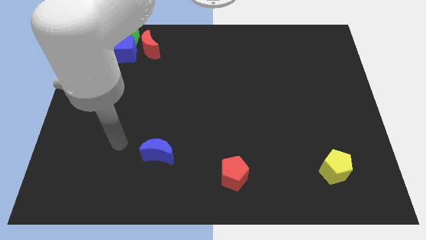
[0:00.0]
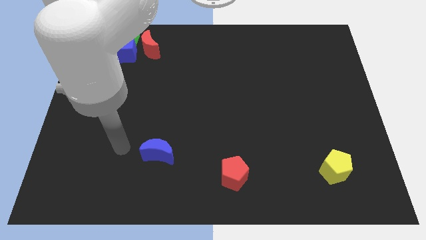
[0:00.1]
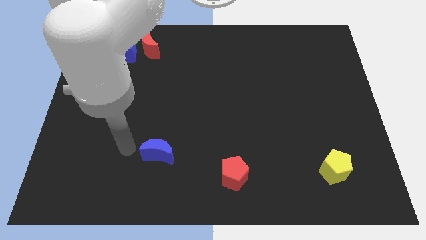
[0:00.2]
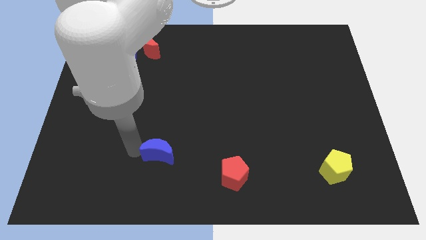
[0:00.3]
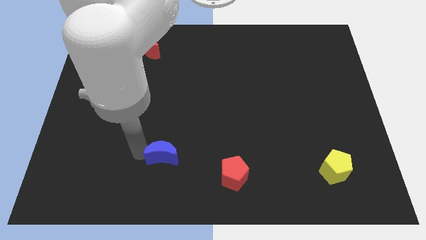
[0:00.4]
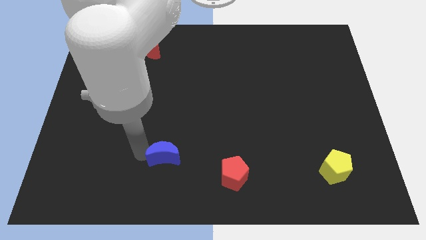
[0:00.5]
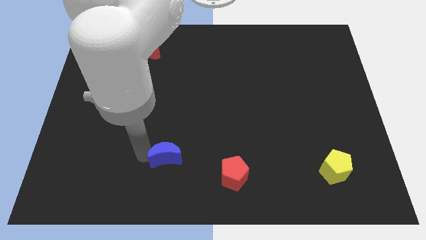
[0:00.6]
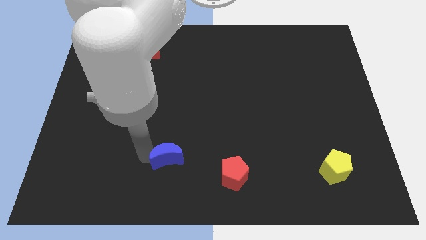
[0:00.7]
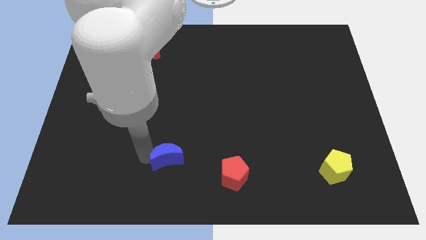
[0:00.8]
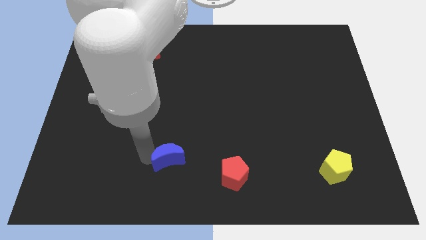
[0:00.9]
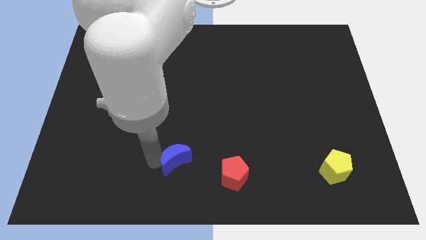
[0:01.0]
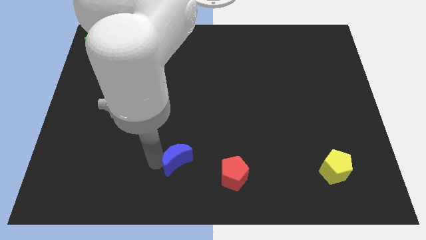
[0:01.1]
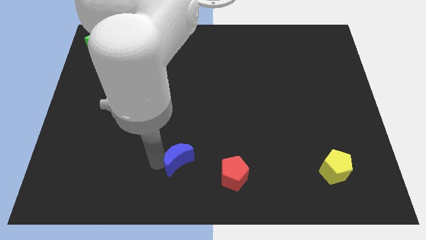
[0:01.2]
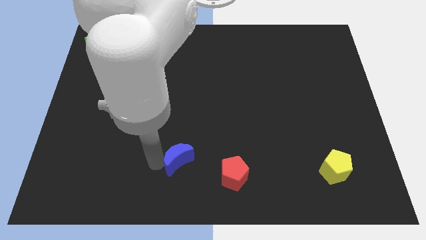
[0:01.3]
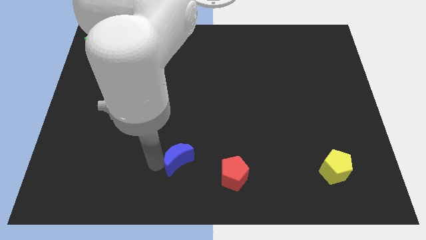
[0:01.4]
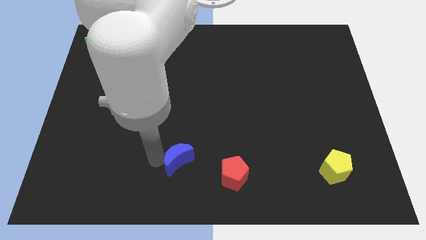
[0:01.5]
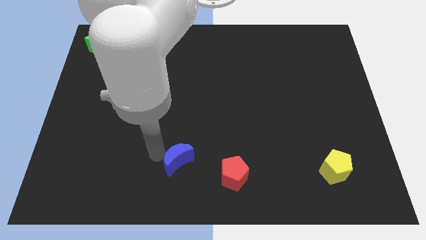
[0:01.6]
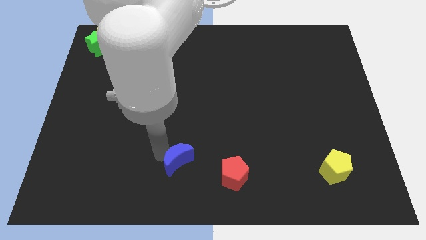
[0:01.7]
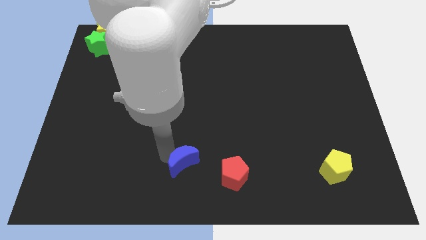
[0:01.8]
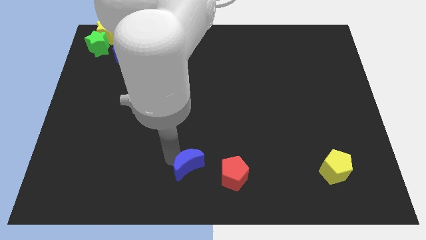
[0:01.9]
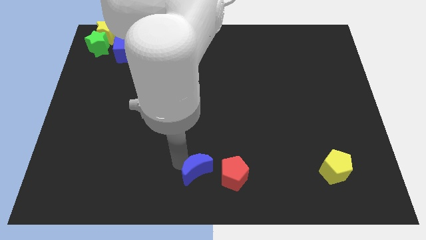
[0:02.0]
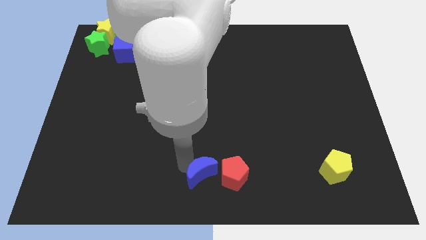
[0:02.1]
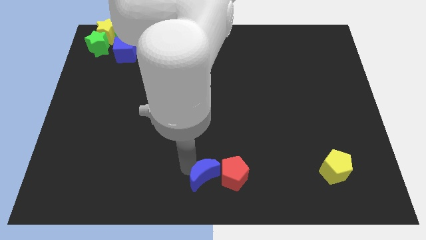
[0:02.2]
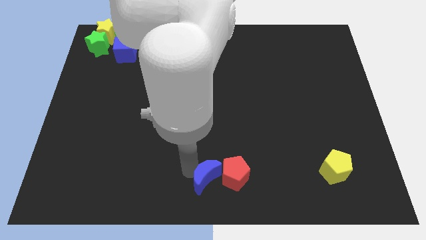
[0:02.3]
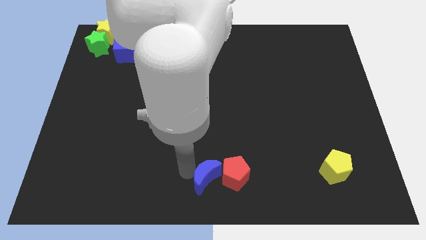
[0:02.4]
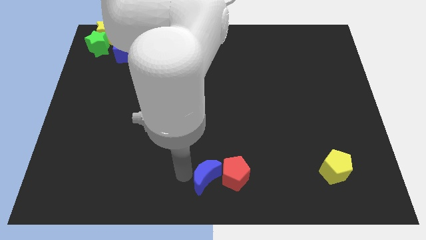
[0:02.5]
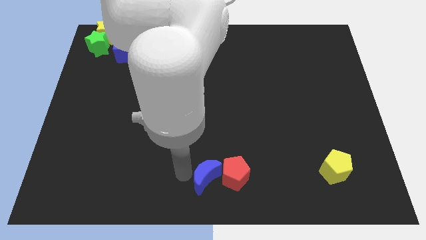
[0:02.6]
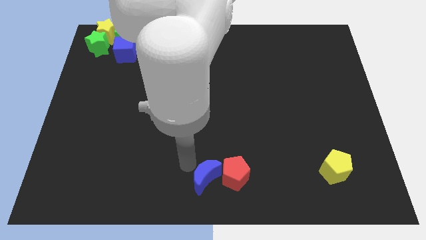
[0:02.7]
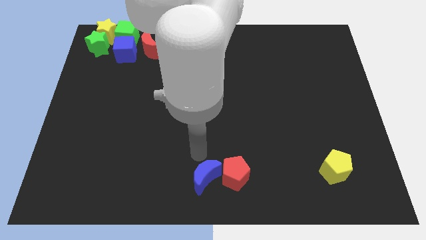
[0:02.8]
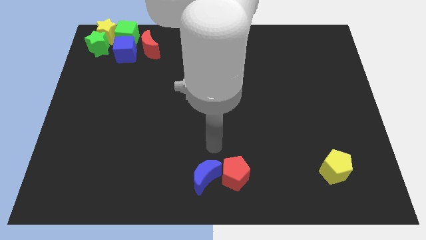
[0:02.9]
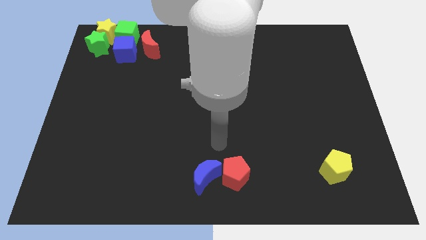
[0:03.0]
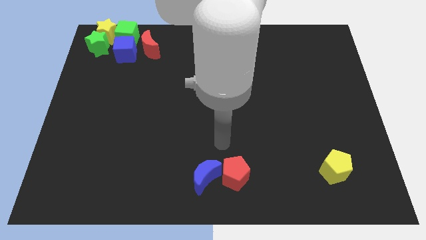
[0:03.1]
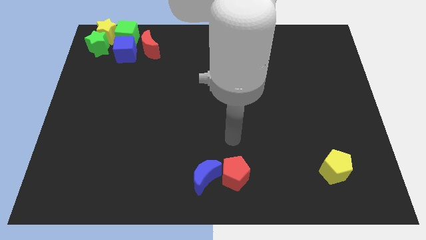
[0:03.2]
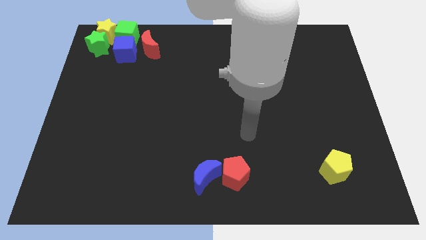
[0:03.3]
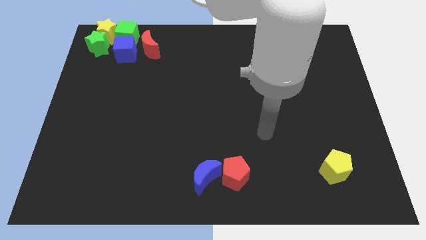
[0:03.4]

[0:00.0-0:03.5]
push the blue crescent into the red pentagon

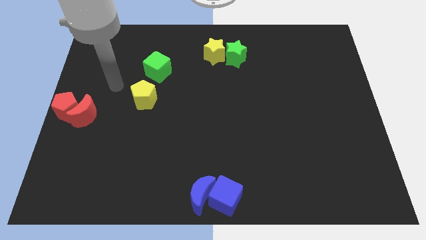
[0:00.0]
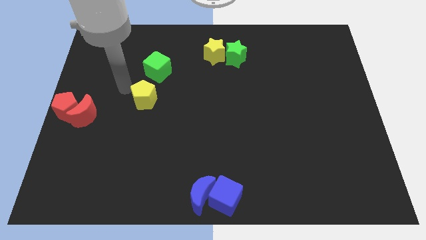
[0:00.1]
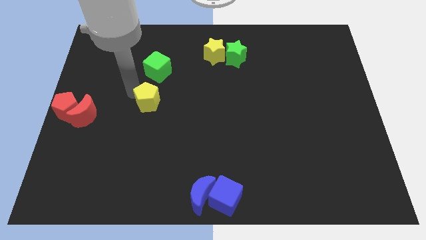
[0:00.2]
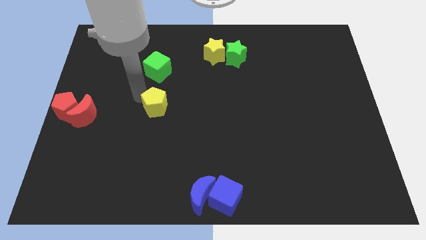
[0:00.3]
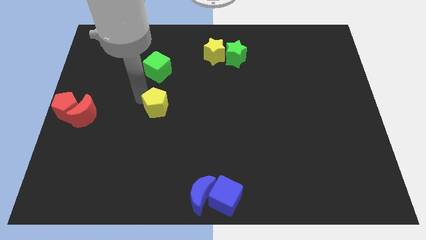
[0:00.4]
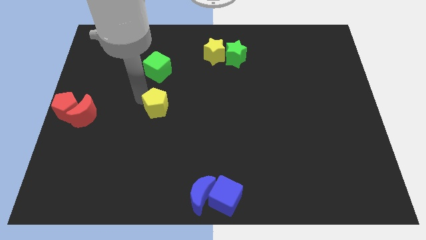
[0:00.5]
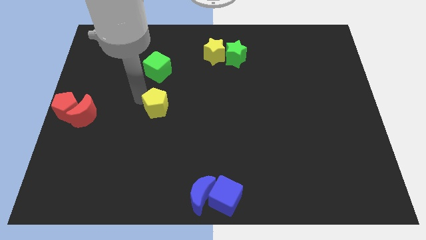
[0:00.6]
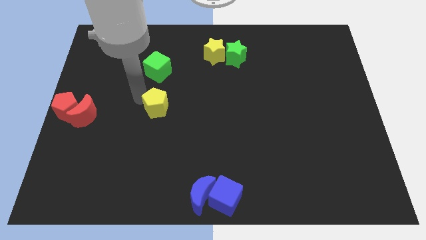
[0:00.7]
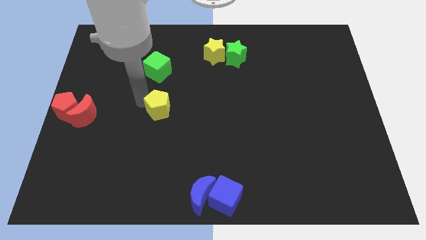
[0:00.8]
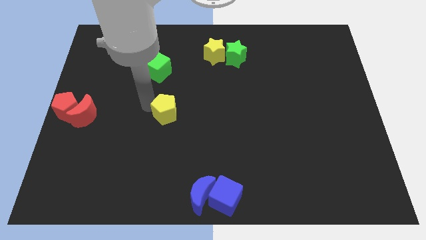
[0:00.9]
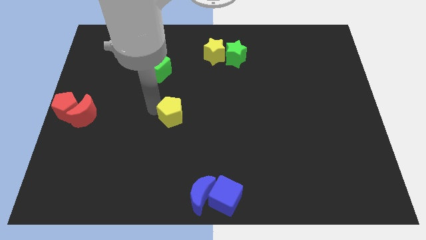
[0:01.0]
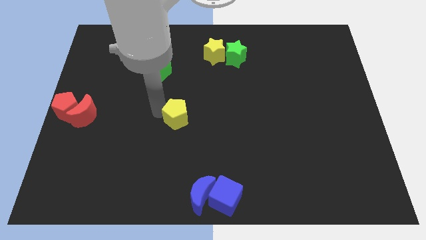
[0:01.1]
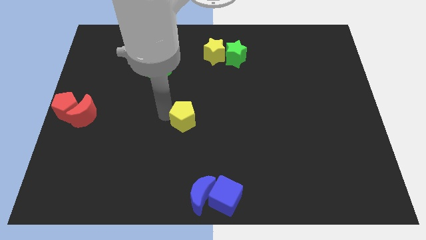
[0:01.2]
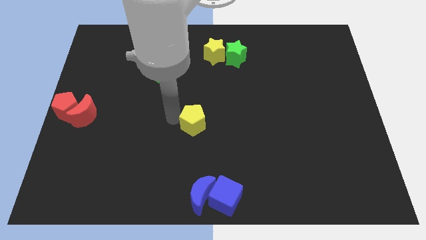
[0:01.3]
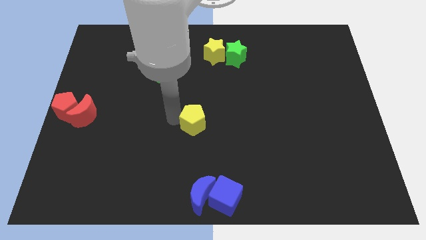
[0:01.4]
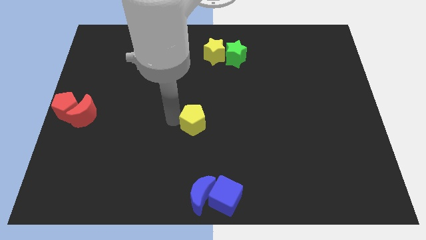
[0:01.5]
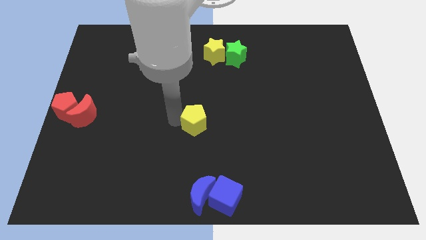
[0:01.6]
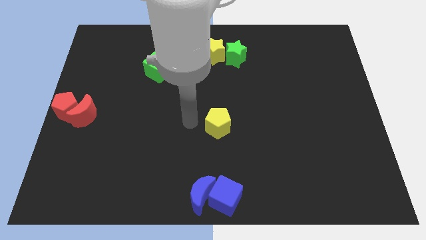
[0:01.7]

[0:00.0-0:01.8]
push the yellow pentagon to the center of the board

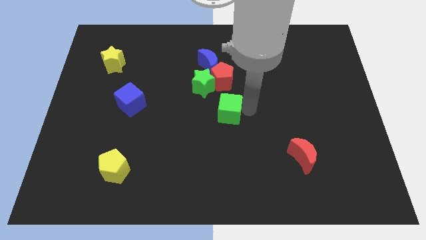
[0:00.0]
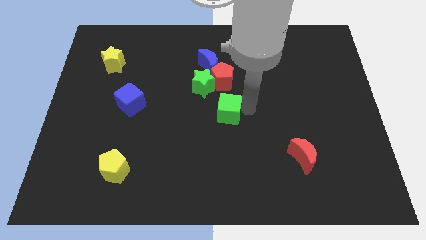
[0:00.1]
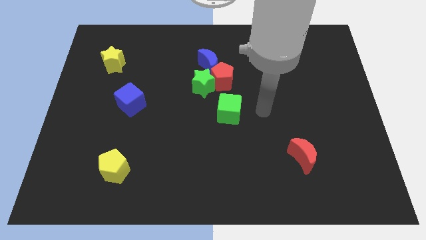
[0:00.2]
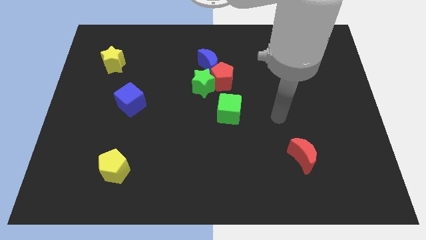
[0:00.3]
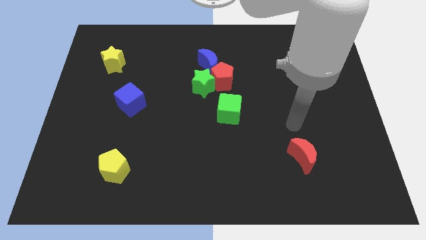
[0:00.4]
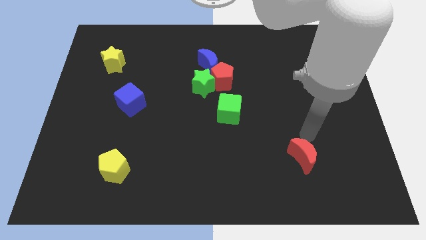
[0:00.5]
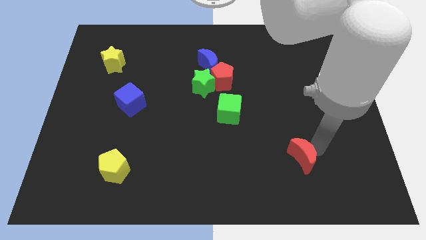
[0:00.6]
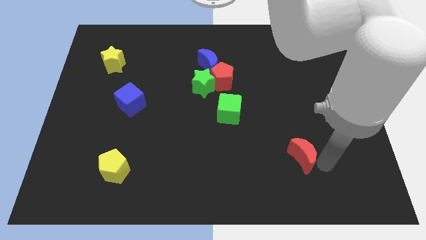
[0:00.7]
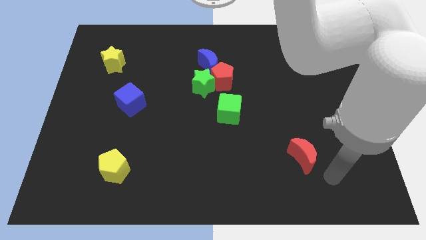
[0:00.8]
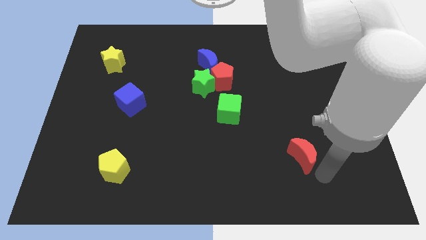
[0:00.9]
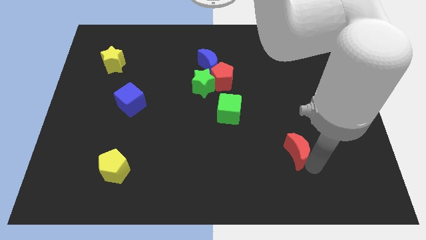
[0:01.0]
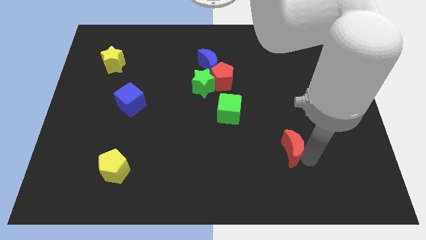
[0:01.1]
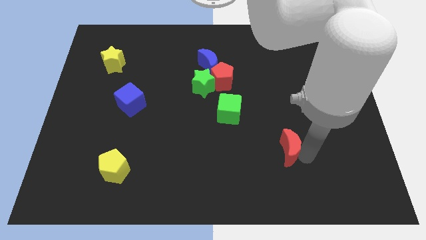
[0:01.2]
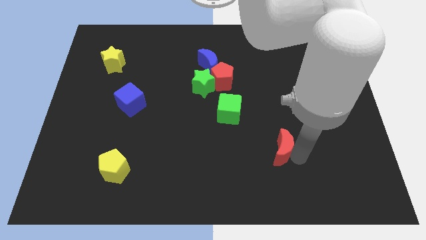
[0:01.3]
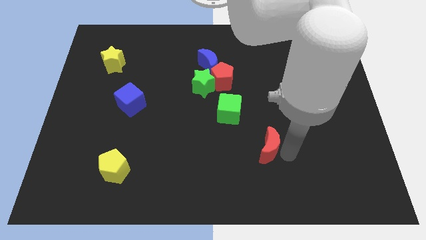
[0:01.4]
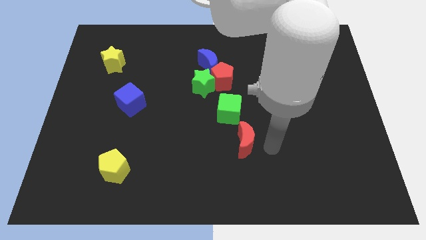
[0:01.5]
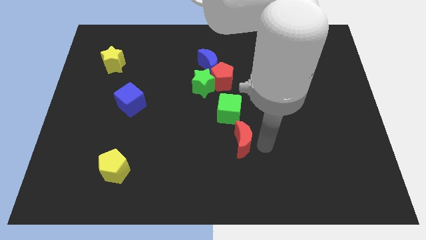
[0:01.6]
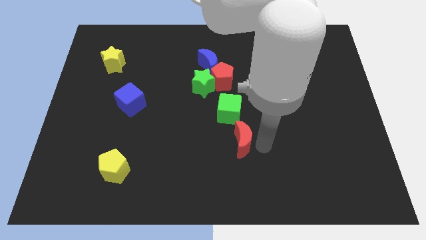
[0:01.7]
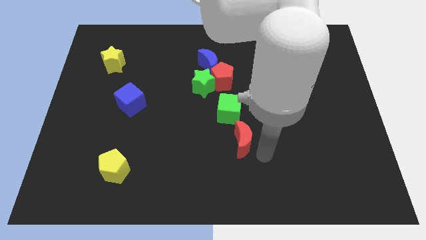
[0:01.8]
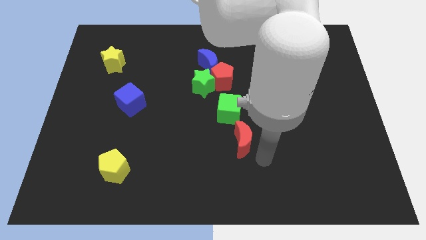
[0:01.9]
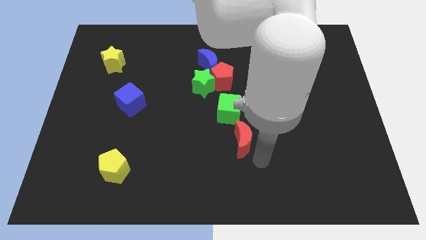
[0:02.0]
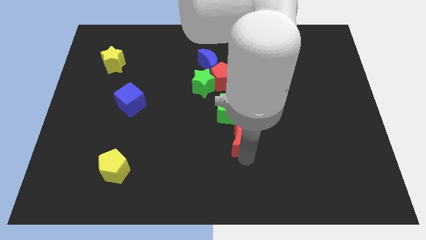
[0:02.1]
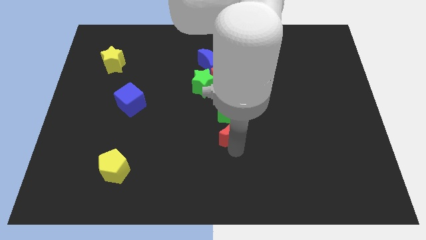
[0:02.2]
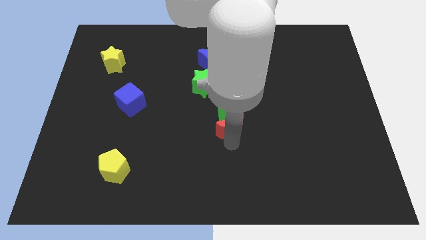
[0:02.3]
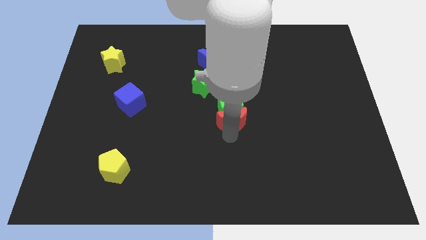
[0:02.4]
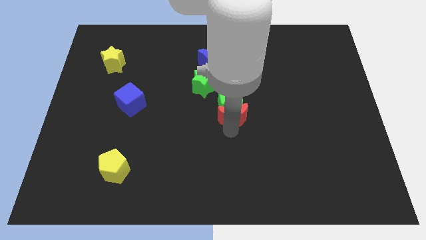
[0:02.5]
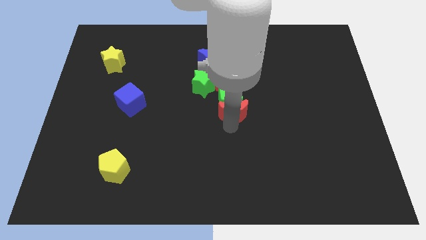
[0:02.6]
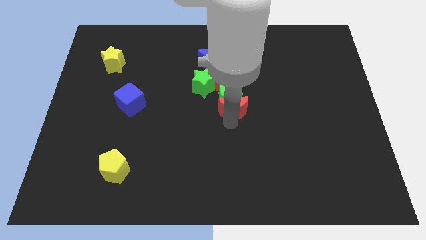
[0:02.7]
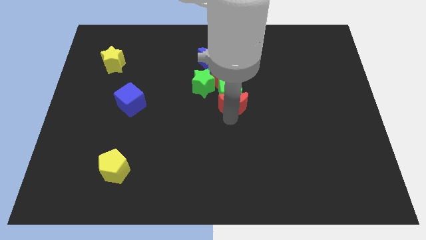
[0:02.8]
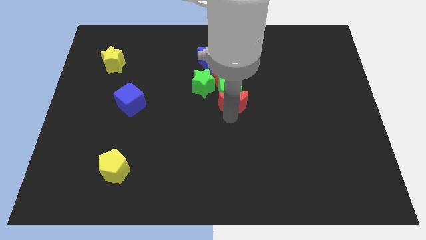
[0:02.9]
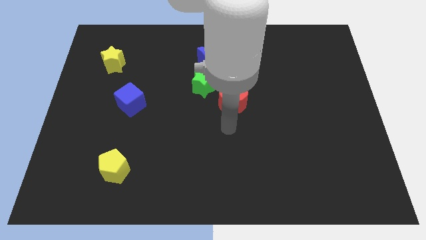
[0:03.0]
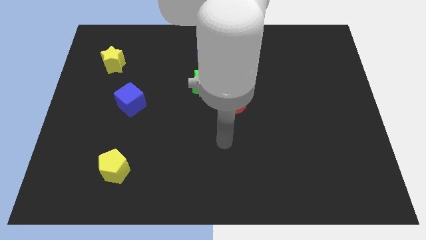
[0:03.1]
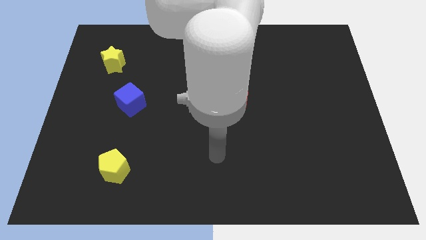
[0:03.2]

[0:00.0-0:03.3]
push the red moon into the green cube

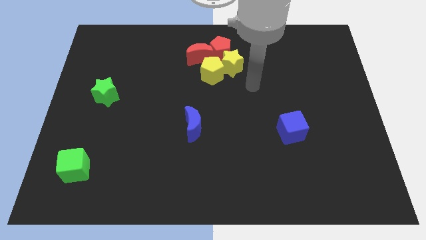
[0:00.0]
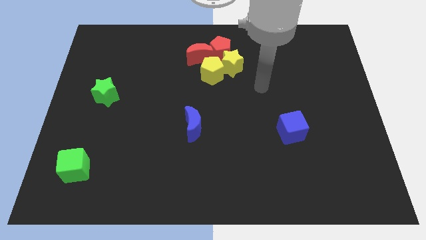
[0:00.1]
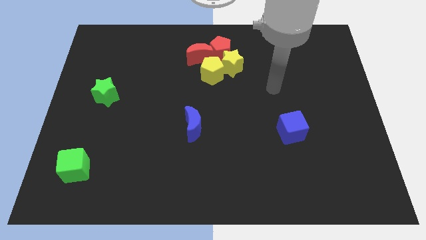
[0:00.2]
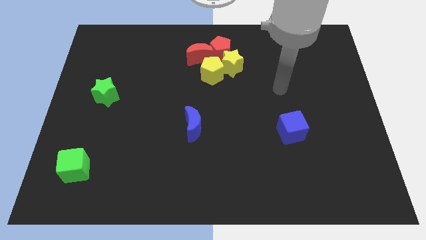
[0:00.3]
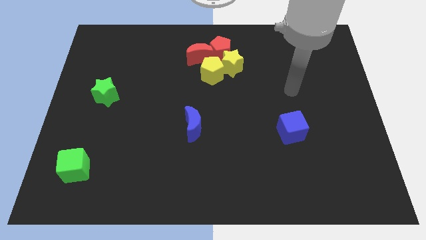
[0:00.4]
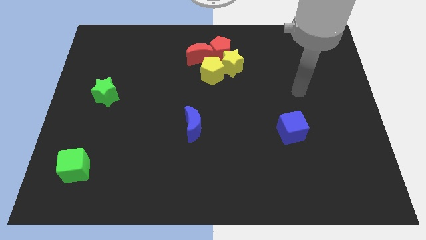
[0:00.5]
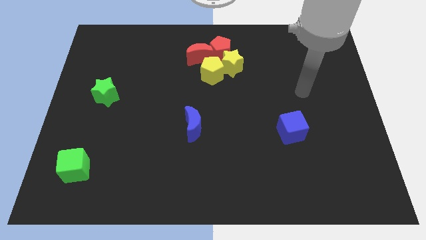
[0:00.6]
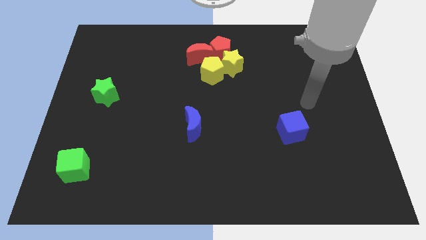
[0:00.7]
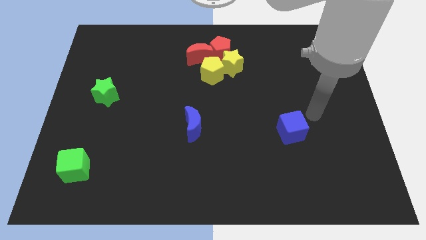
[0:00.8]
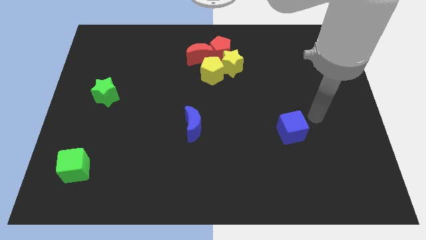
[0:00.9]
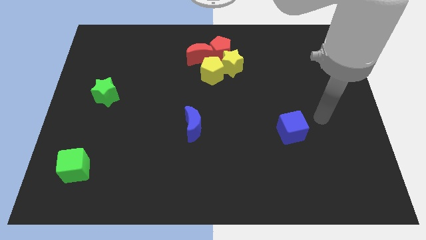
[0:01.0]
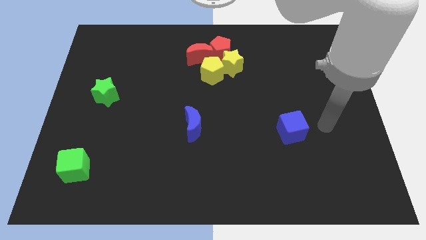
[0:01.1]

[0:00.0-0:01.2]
move your arm to the right of the blue cube
